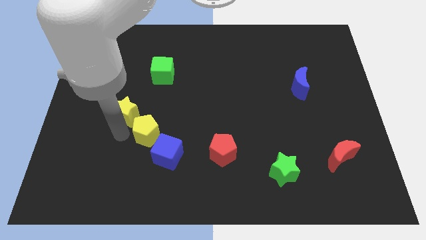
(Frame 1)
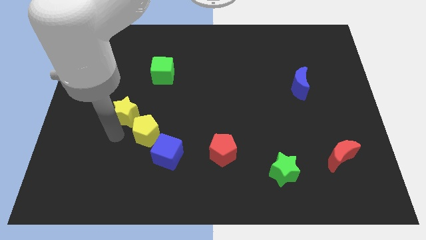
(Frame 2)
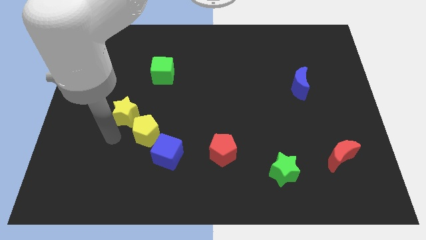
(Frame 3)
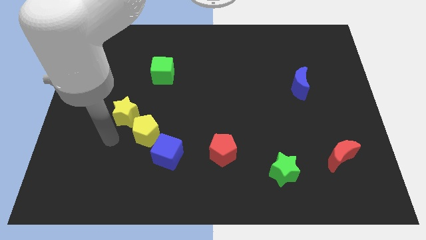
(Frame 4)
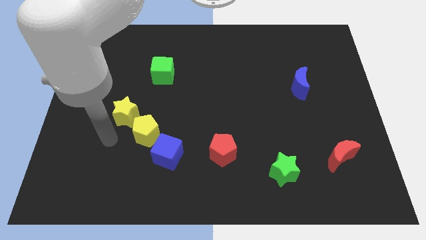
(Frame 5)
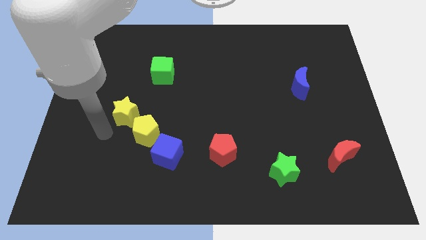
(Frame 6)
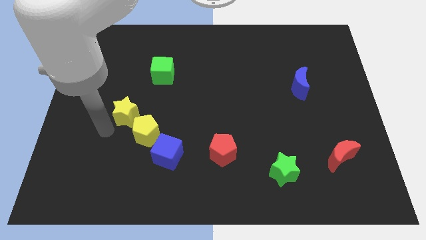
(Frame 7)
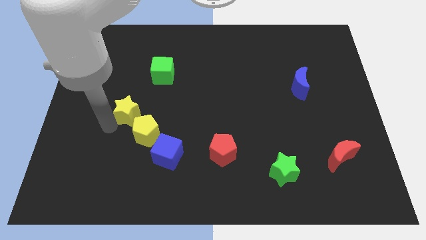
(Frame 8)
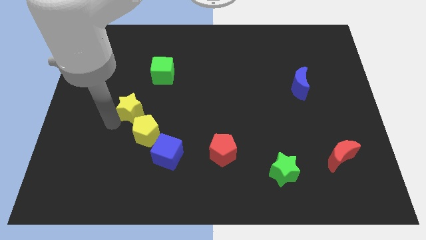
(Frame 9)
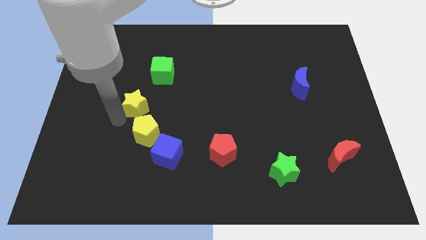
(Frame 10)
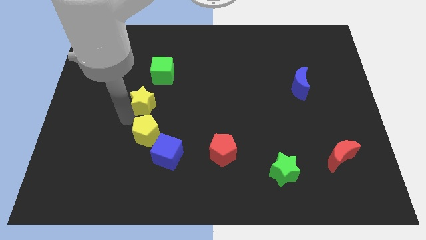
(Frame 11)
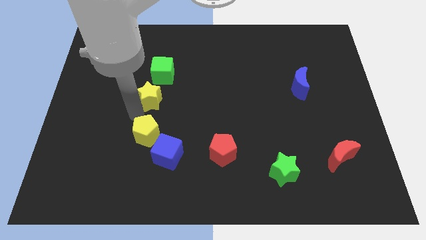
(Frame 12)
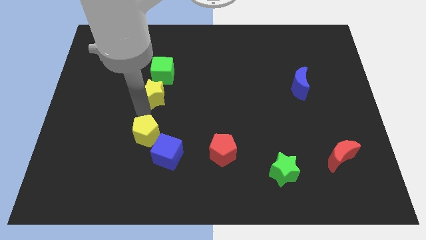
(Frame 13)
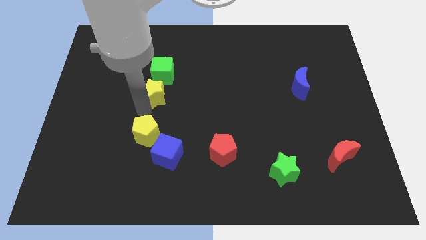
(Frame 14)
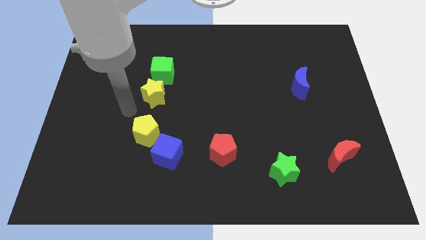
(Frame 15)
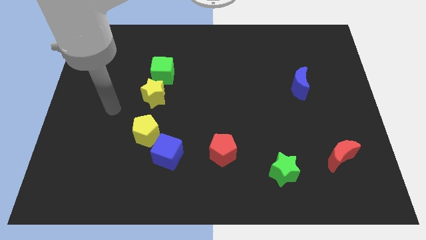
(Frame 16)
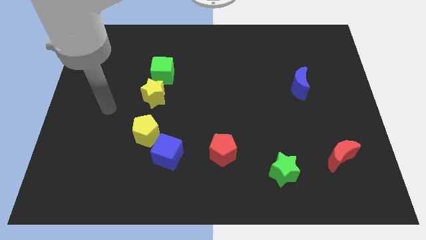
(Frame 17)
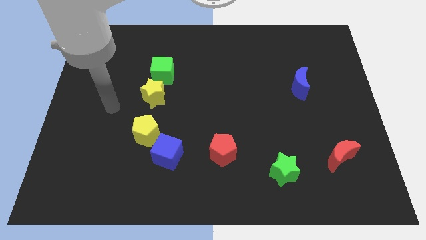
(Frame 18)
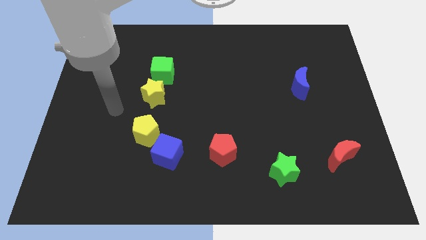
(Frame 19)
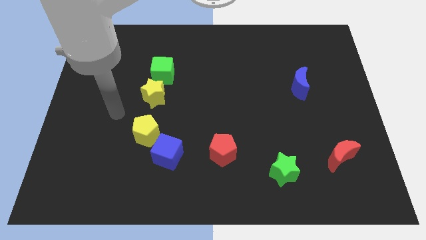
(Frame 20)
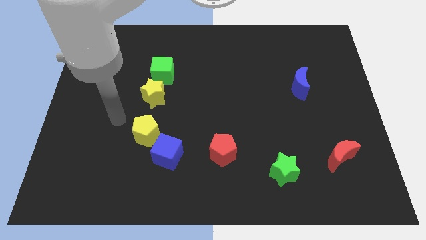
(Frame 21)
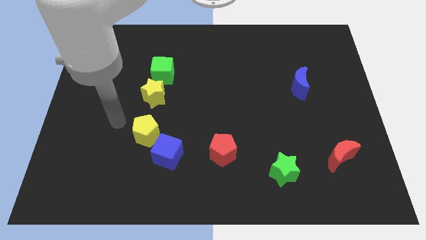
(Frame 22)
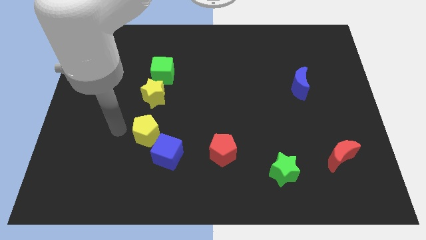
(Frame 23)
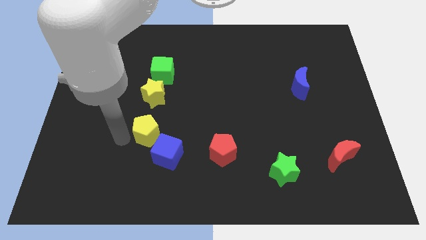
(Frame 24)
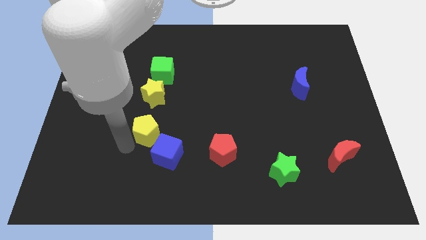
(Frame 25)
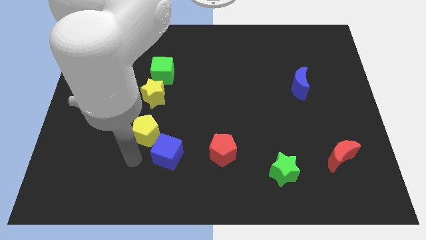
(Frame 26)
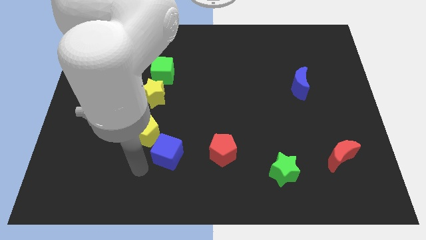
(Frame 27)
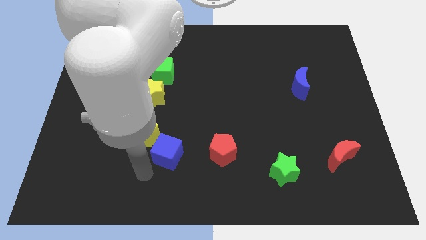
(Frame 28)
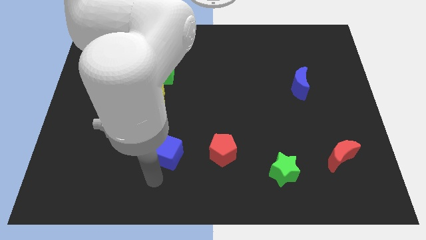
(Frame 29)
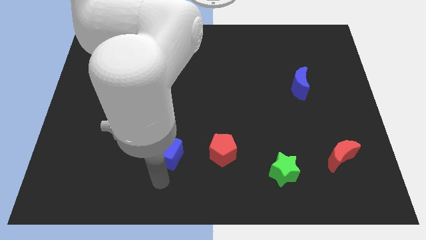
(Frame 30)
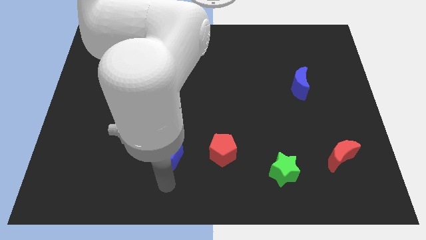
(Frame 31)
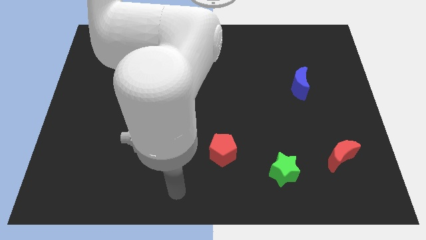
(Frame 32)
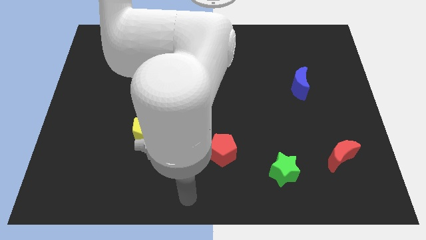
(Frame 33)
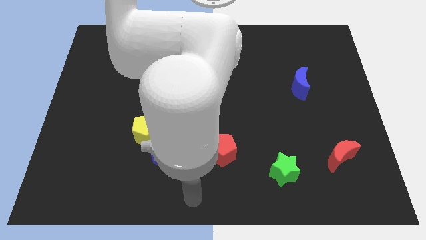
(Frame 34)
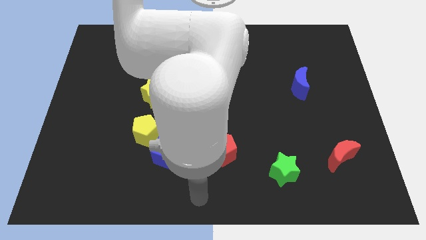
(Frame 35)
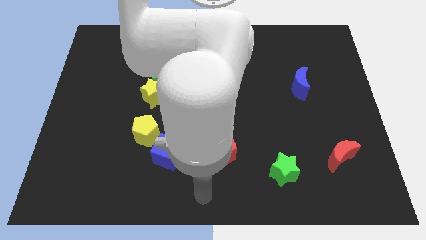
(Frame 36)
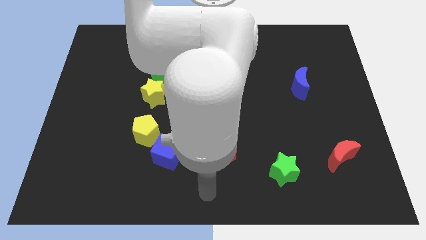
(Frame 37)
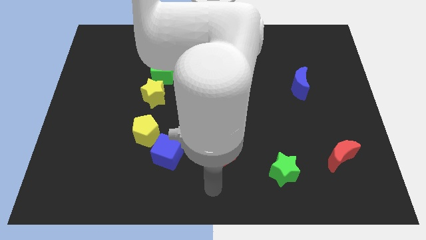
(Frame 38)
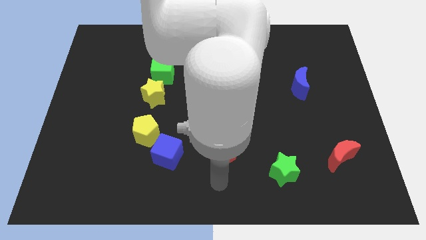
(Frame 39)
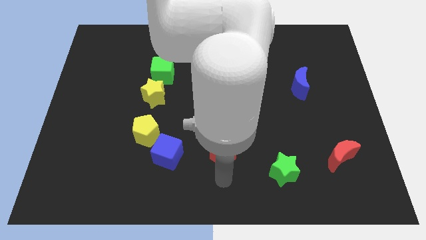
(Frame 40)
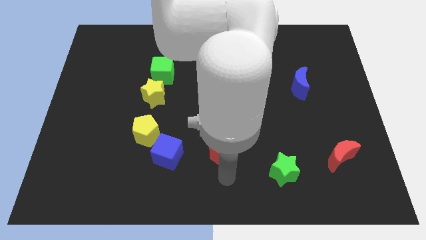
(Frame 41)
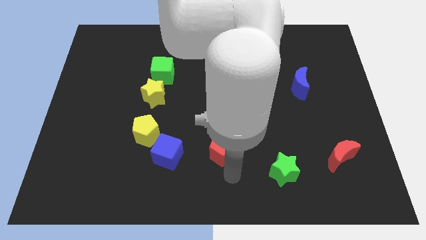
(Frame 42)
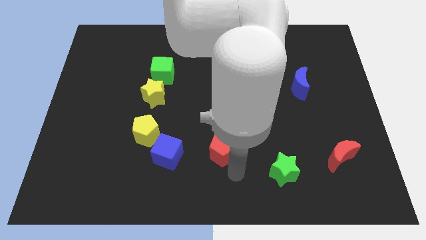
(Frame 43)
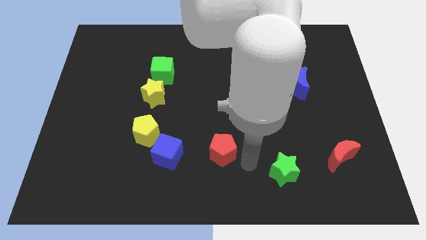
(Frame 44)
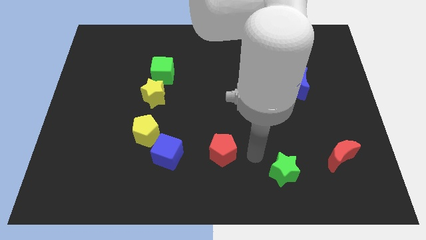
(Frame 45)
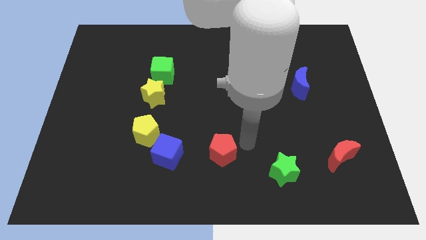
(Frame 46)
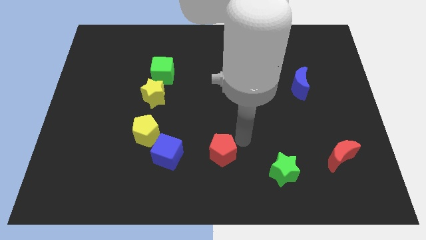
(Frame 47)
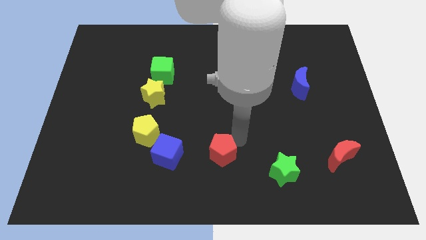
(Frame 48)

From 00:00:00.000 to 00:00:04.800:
push the yellow star to the bottom left of the green cube

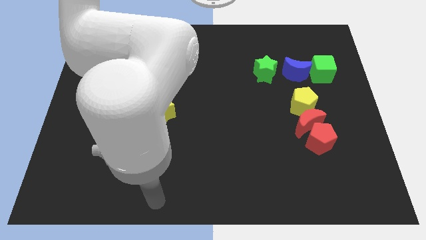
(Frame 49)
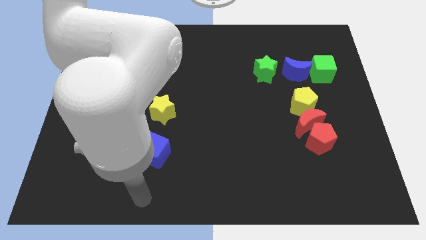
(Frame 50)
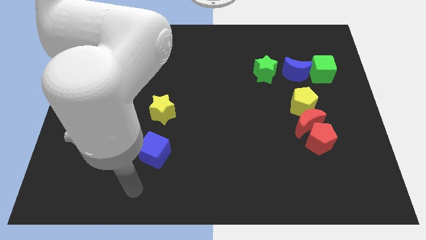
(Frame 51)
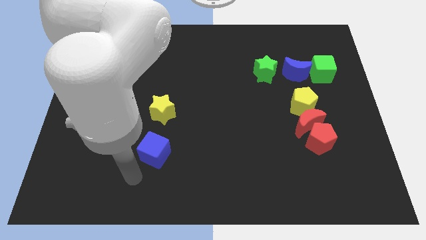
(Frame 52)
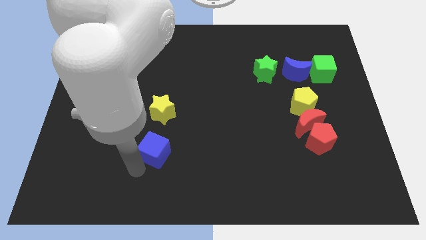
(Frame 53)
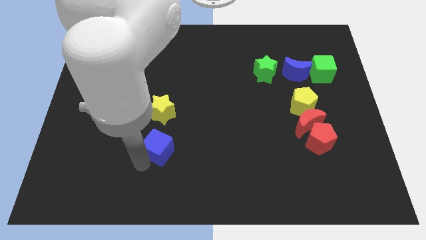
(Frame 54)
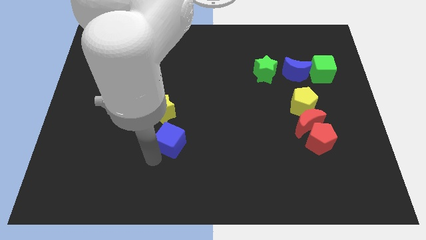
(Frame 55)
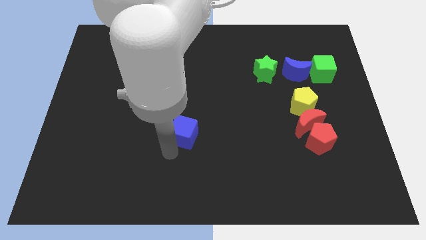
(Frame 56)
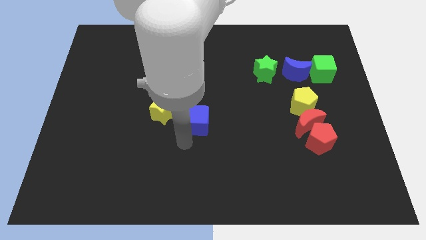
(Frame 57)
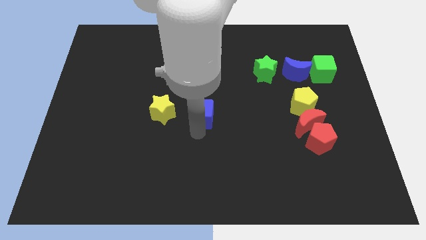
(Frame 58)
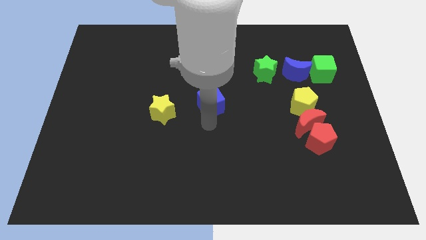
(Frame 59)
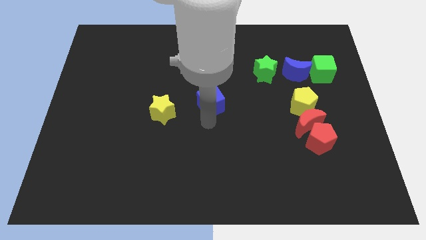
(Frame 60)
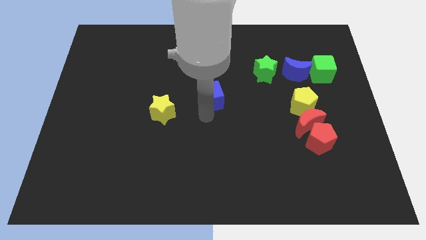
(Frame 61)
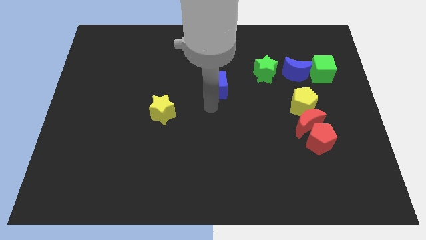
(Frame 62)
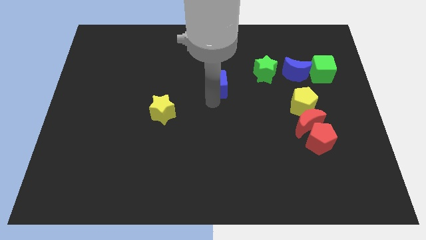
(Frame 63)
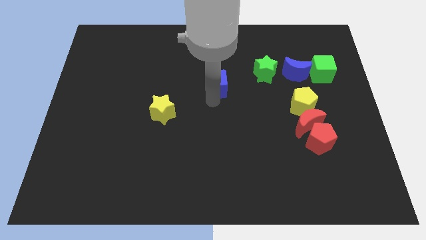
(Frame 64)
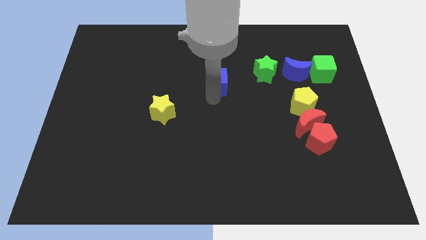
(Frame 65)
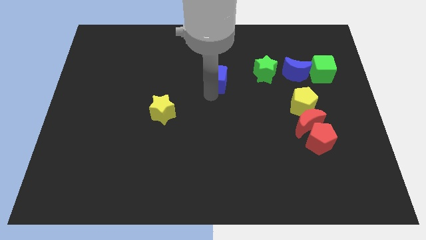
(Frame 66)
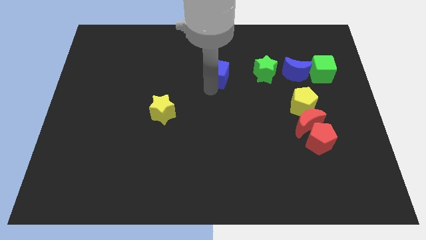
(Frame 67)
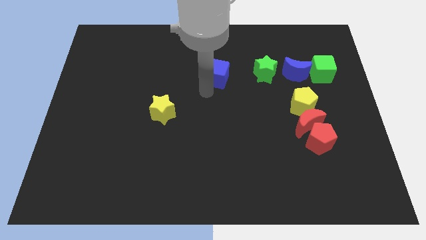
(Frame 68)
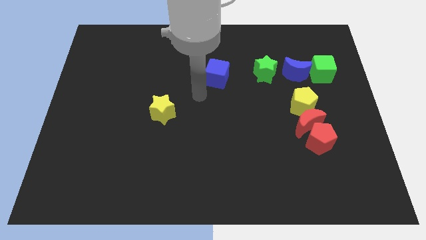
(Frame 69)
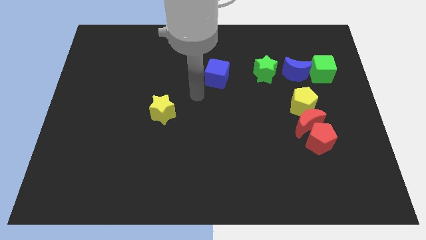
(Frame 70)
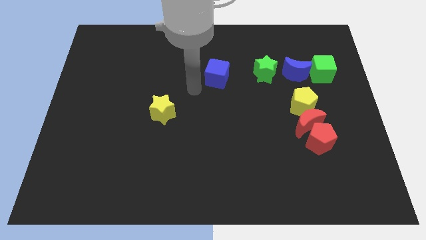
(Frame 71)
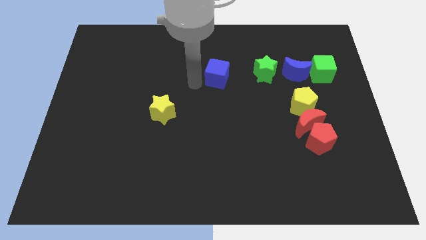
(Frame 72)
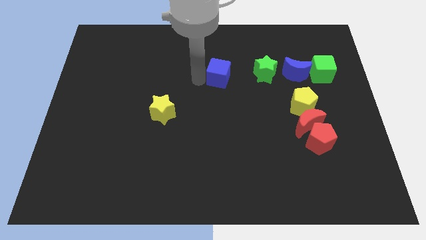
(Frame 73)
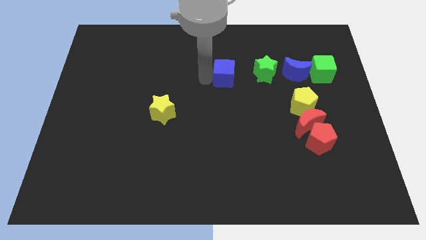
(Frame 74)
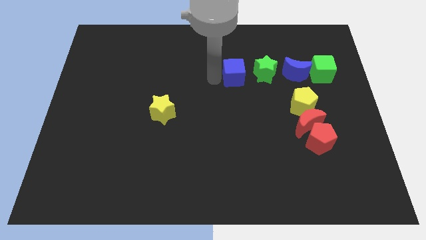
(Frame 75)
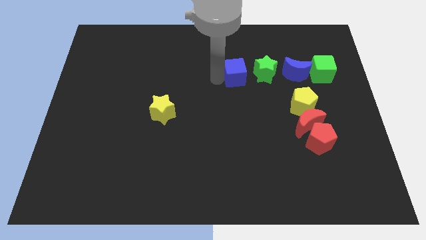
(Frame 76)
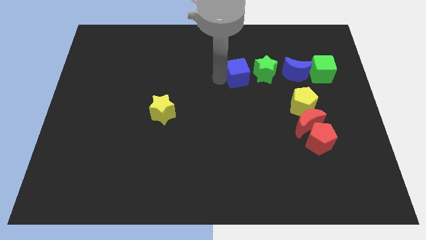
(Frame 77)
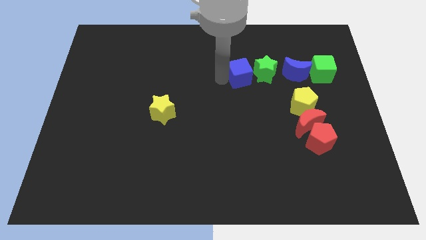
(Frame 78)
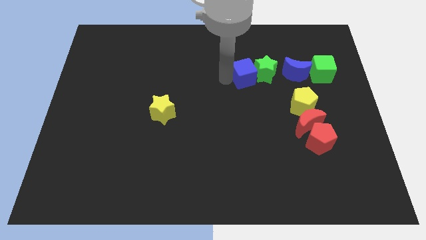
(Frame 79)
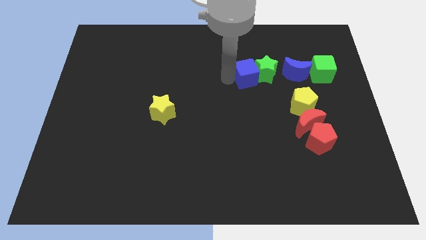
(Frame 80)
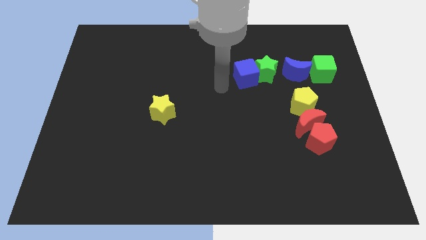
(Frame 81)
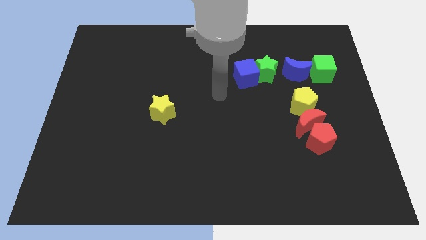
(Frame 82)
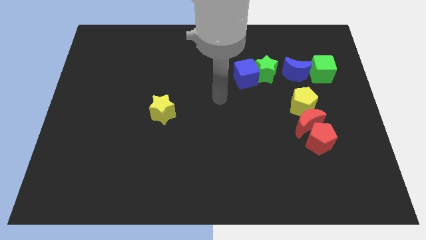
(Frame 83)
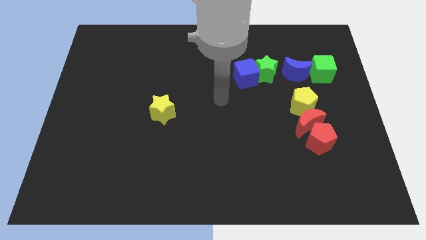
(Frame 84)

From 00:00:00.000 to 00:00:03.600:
move the blue cube close to the green star

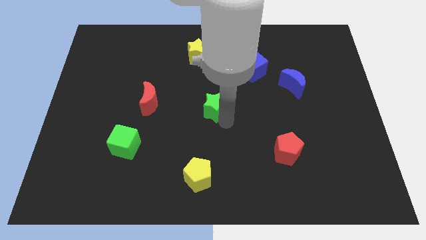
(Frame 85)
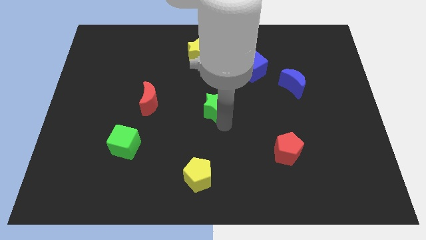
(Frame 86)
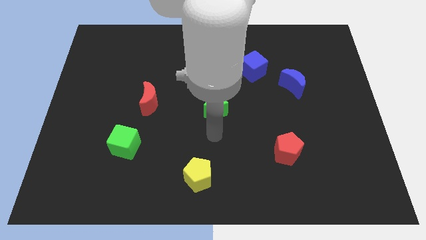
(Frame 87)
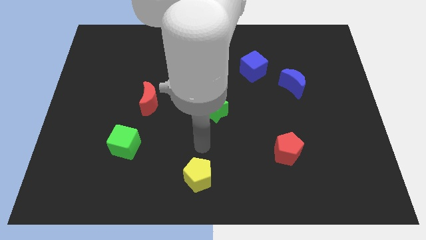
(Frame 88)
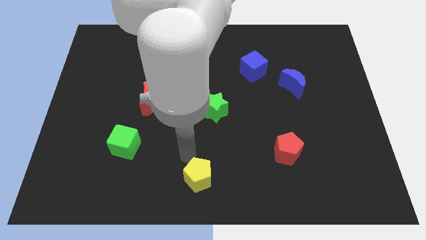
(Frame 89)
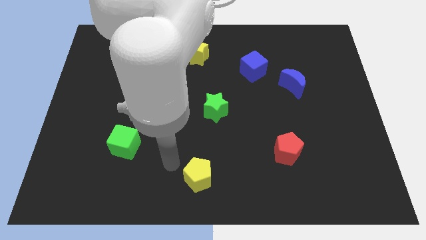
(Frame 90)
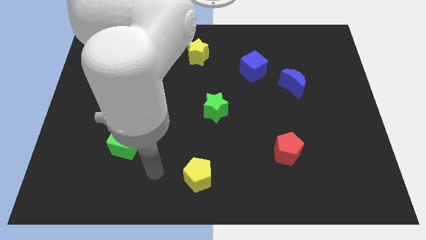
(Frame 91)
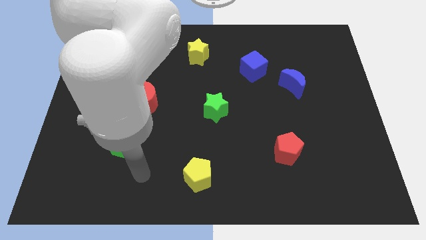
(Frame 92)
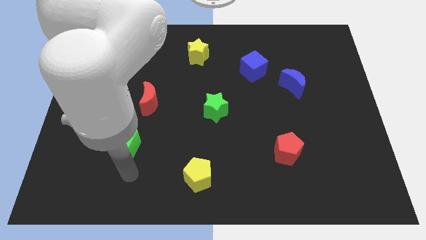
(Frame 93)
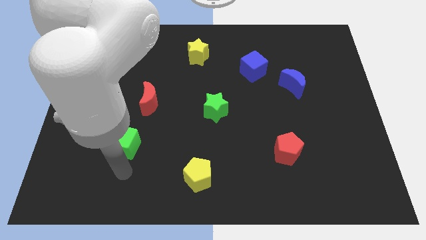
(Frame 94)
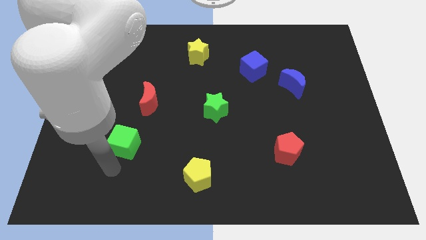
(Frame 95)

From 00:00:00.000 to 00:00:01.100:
go away from the green star
